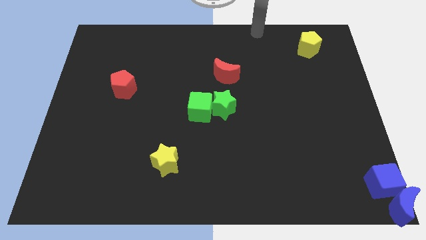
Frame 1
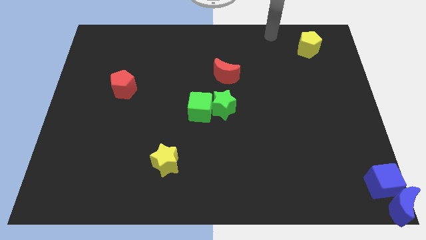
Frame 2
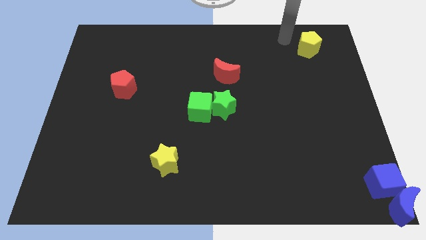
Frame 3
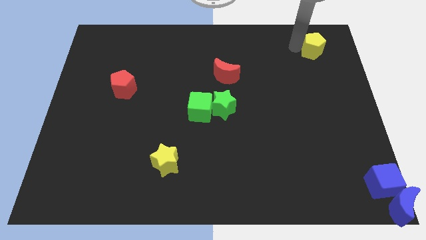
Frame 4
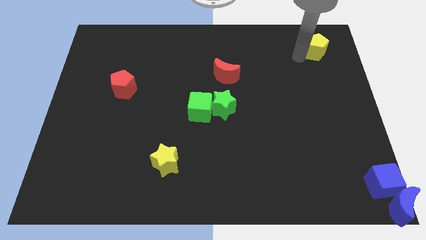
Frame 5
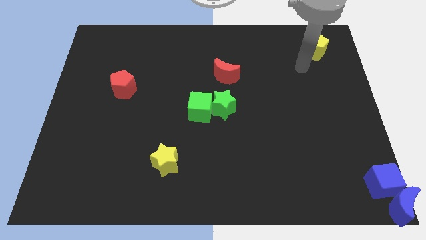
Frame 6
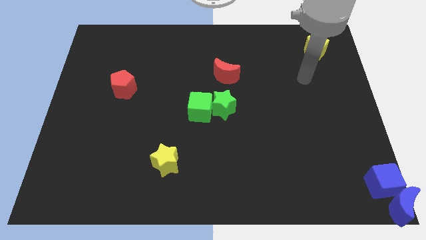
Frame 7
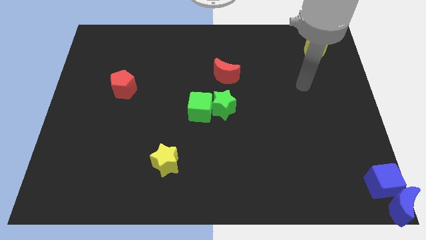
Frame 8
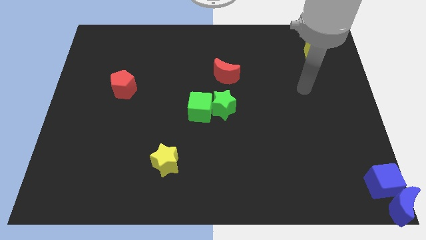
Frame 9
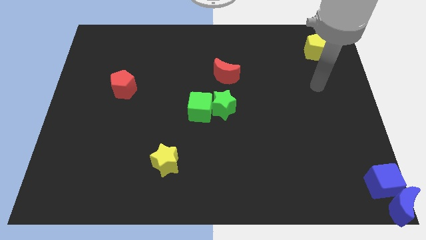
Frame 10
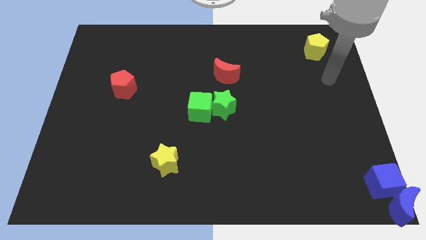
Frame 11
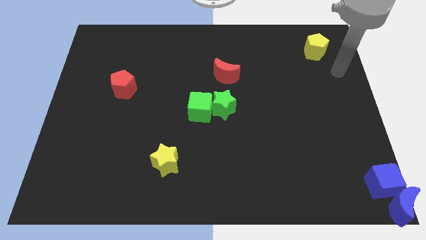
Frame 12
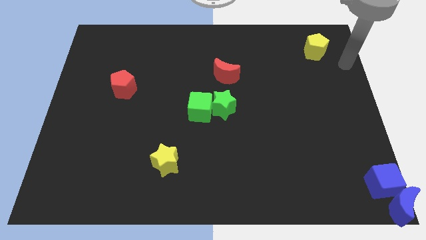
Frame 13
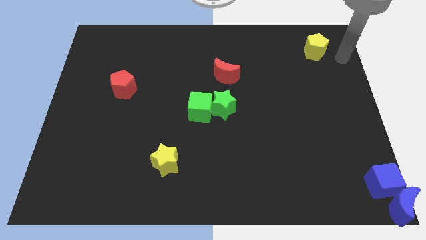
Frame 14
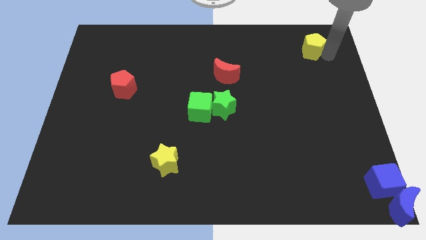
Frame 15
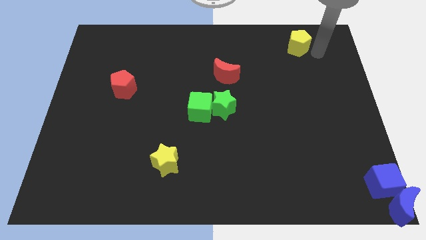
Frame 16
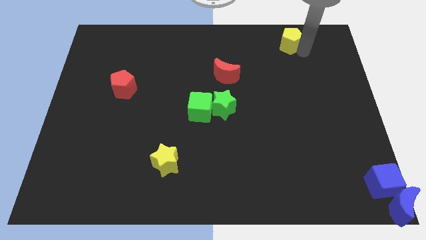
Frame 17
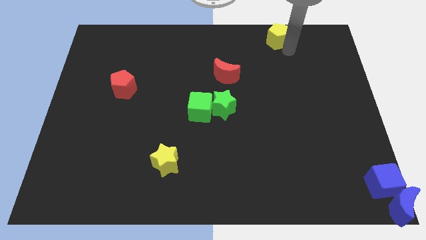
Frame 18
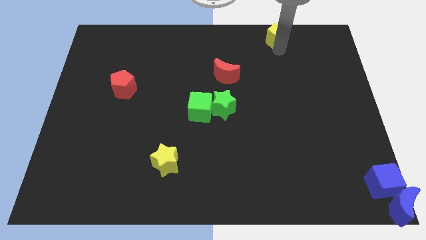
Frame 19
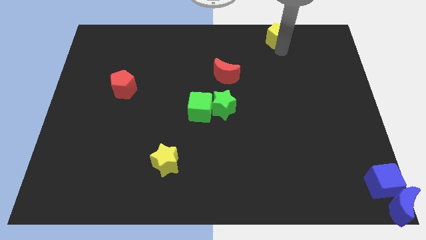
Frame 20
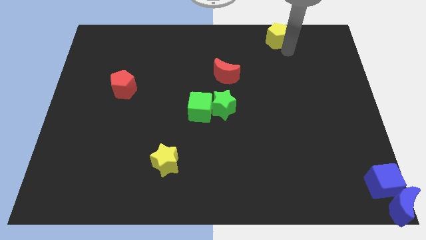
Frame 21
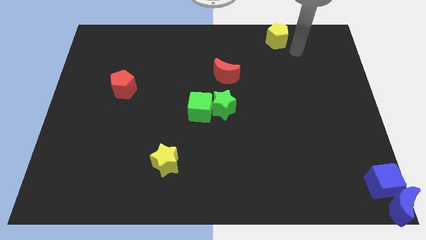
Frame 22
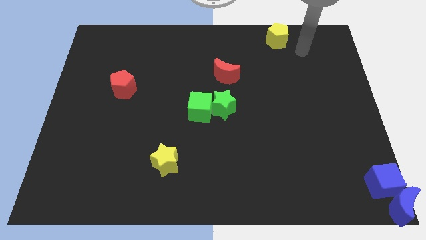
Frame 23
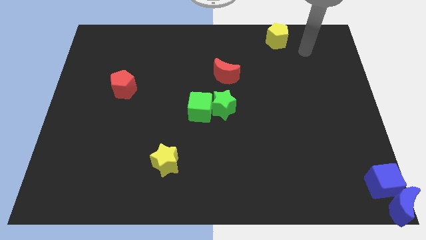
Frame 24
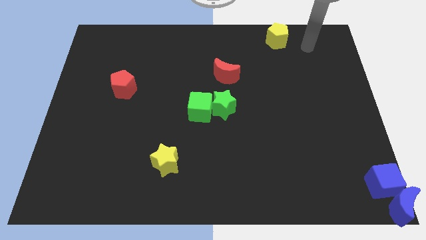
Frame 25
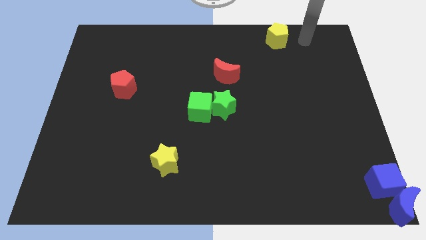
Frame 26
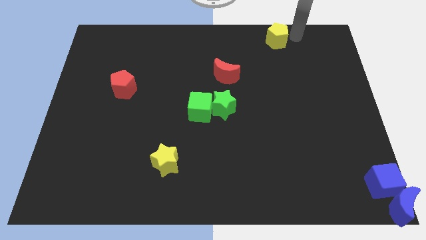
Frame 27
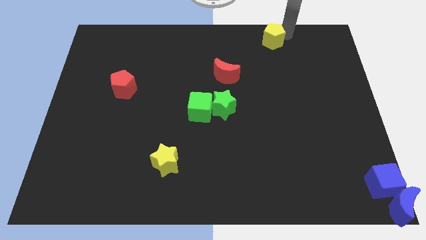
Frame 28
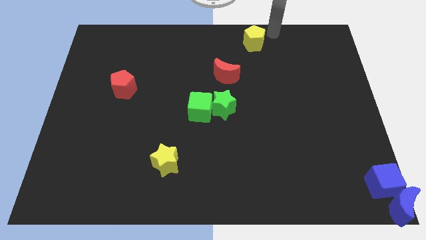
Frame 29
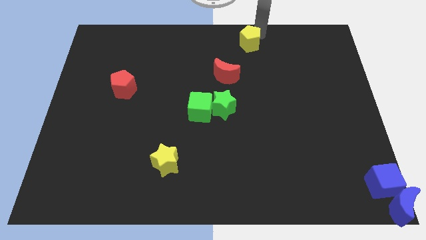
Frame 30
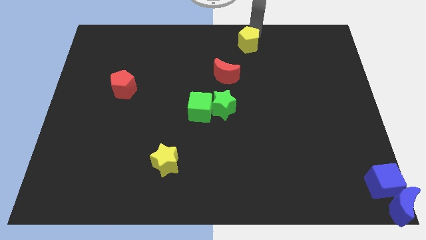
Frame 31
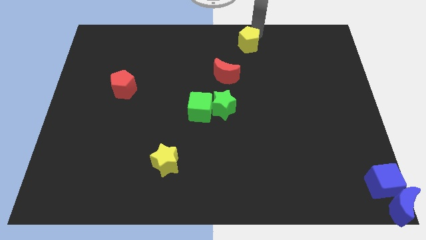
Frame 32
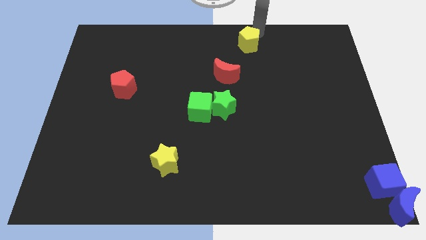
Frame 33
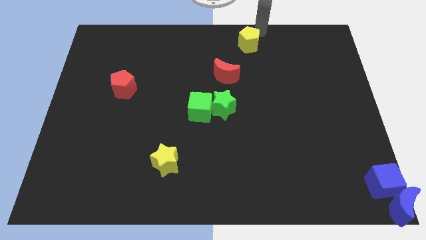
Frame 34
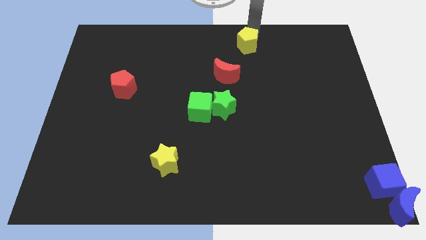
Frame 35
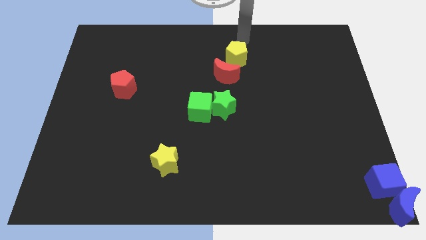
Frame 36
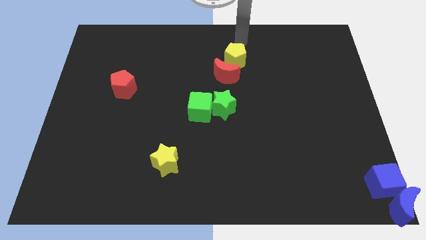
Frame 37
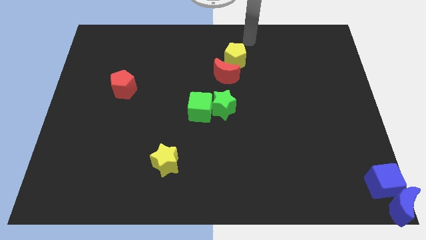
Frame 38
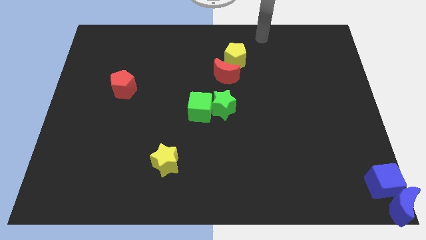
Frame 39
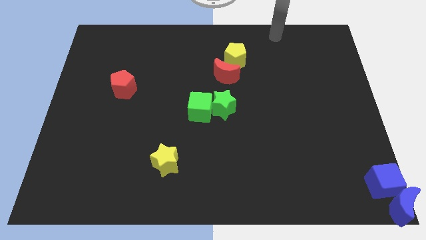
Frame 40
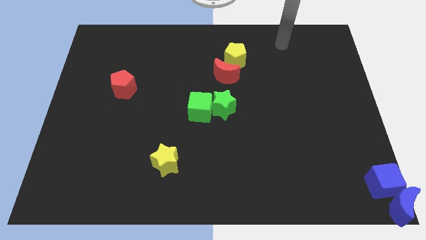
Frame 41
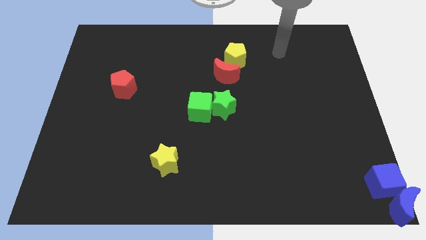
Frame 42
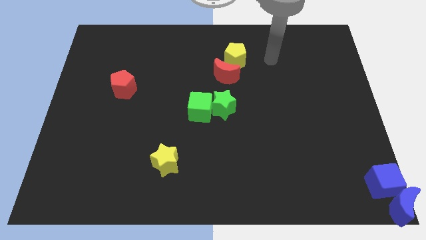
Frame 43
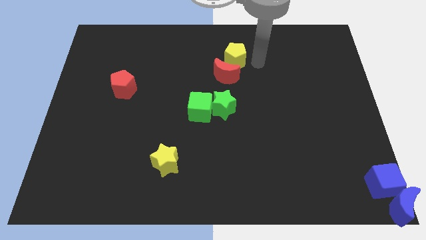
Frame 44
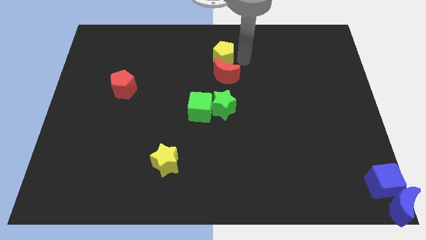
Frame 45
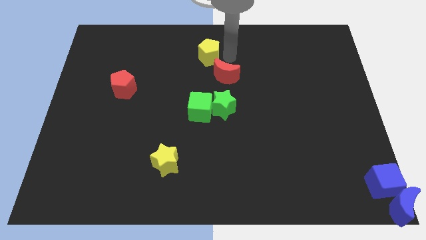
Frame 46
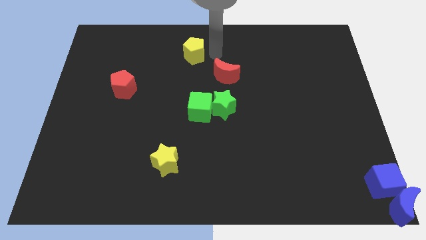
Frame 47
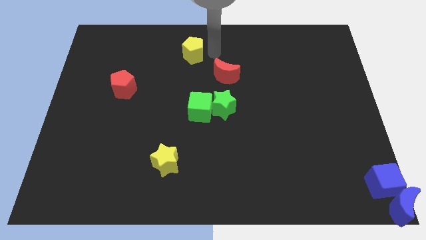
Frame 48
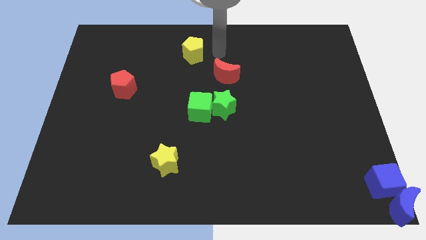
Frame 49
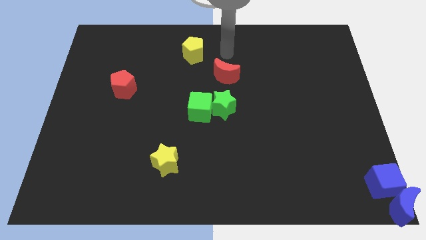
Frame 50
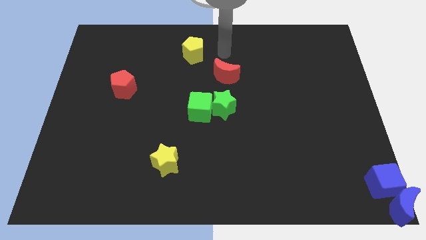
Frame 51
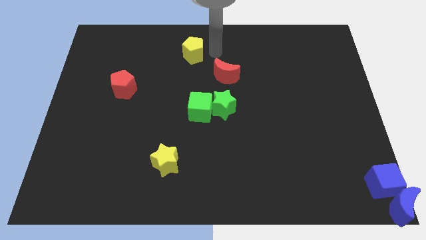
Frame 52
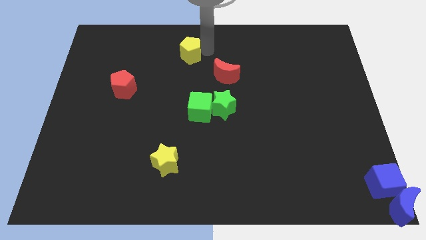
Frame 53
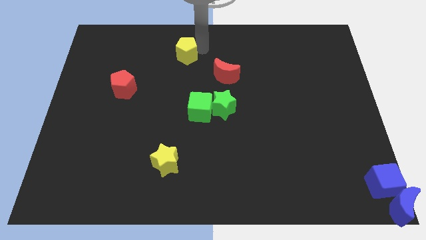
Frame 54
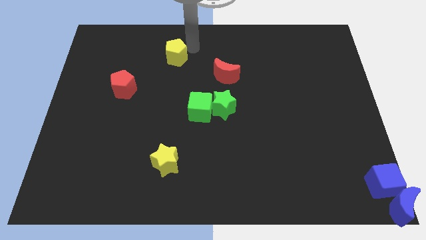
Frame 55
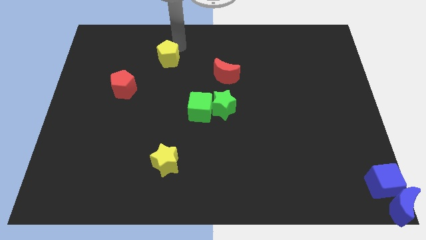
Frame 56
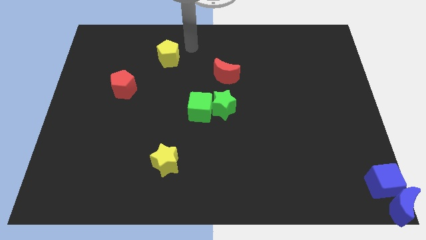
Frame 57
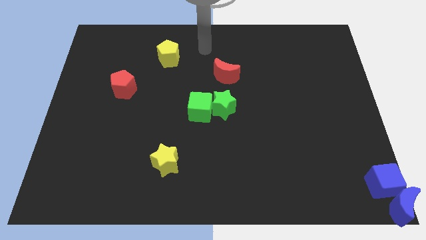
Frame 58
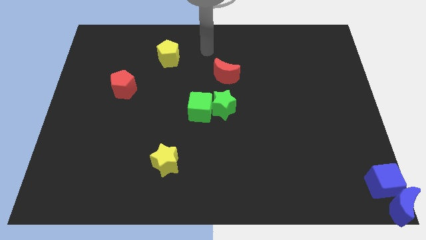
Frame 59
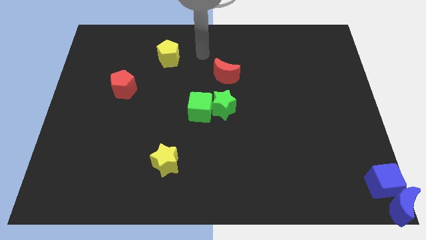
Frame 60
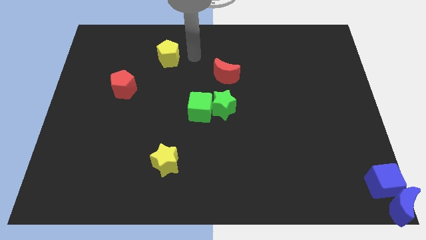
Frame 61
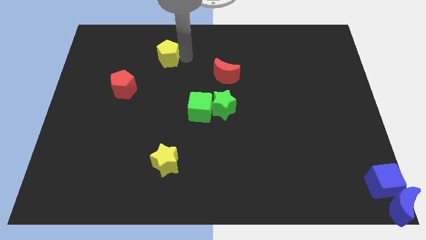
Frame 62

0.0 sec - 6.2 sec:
put the yellow pentagon diagonally on the top right of the red pentagon

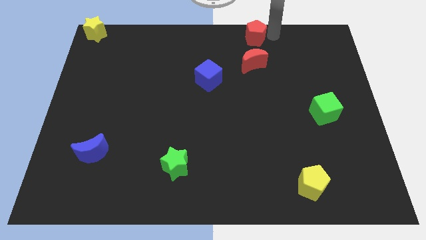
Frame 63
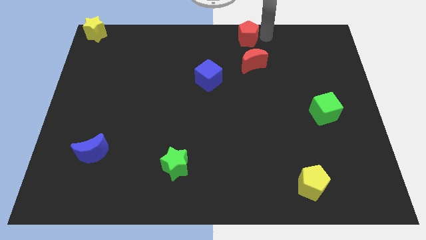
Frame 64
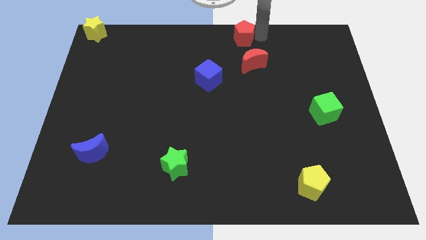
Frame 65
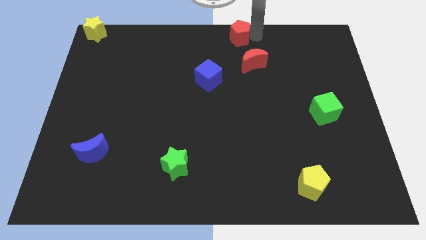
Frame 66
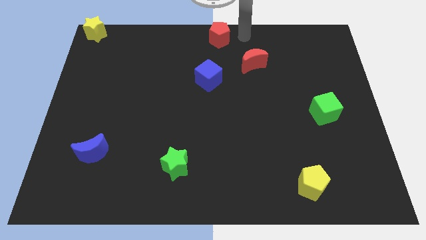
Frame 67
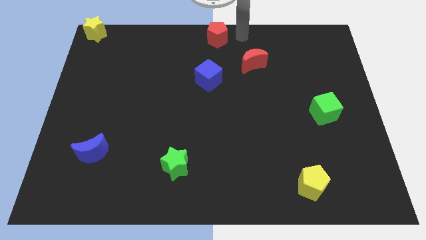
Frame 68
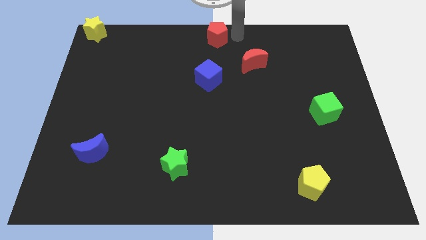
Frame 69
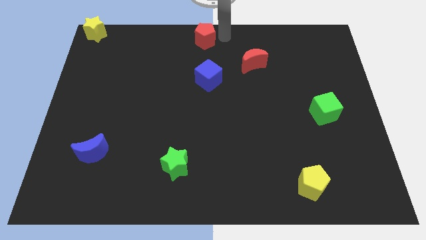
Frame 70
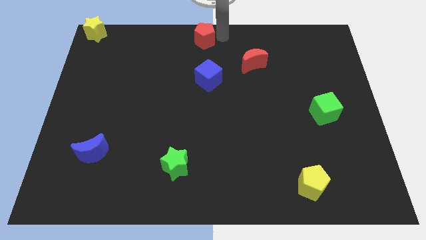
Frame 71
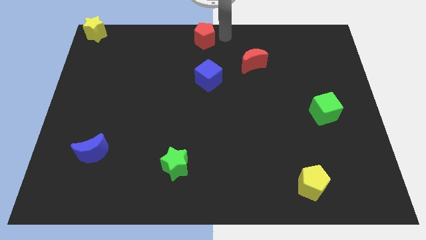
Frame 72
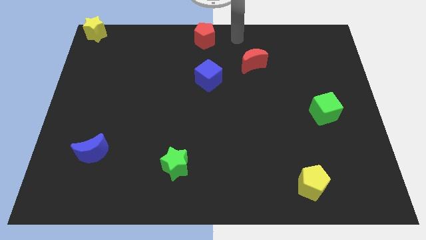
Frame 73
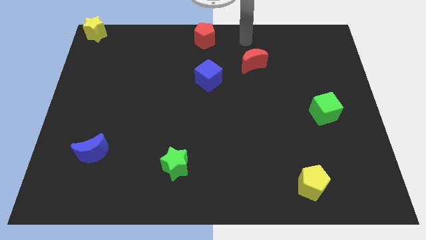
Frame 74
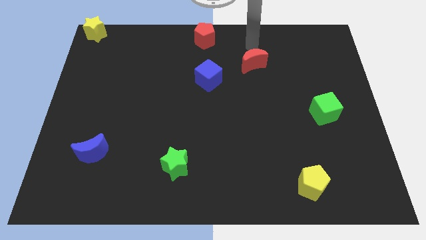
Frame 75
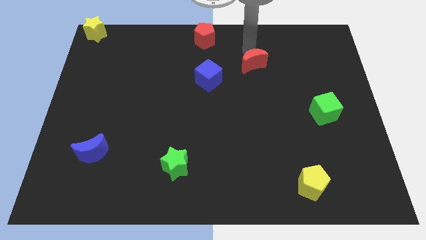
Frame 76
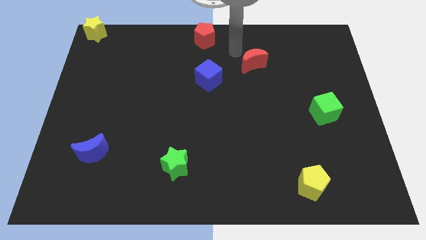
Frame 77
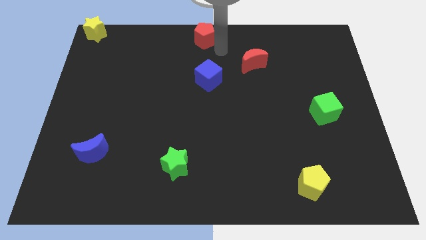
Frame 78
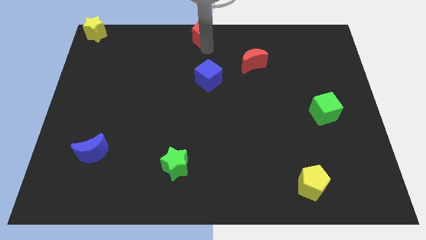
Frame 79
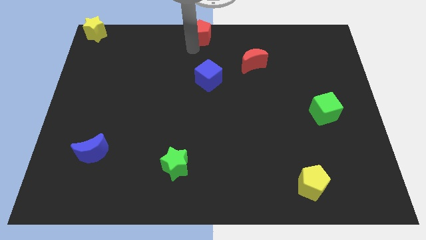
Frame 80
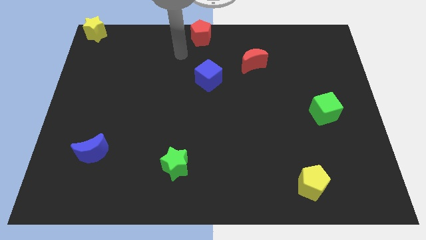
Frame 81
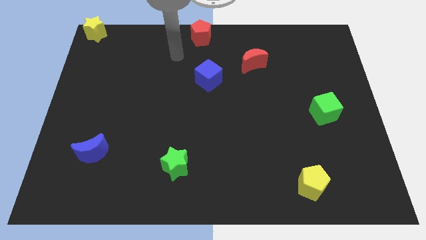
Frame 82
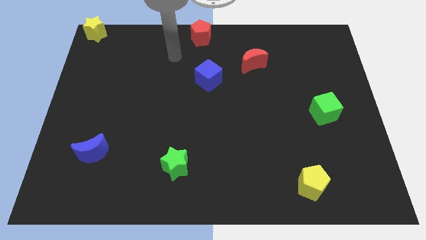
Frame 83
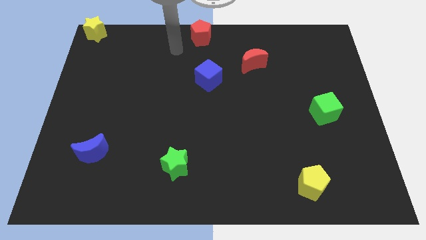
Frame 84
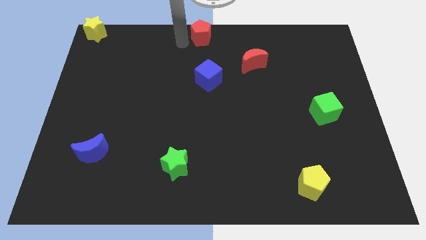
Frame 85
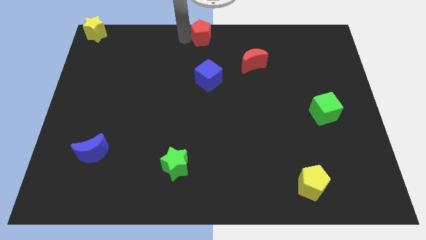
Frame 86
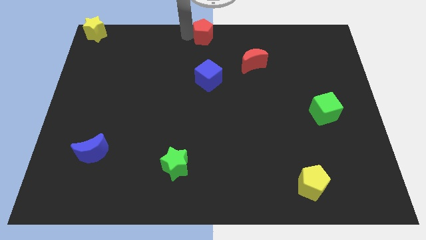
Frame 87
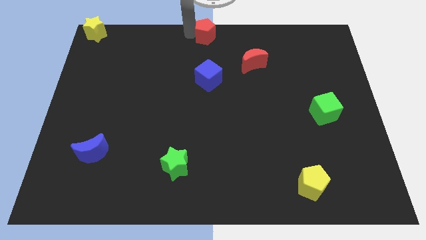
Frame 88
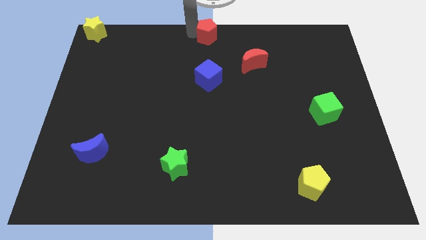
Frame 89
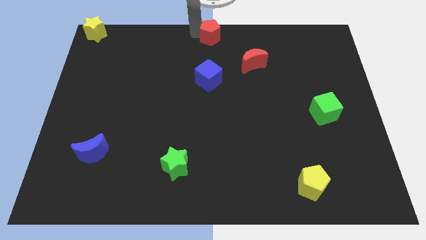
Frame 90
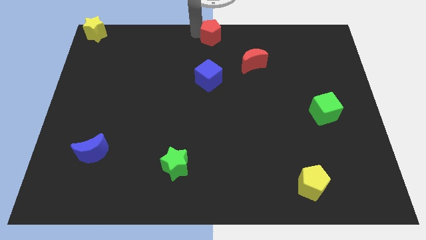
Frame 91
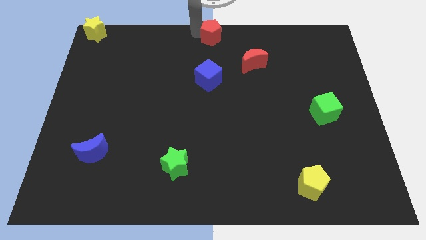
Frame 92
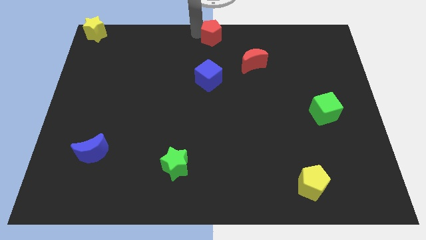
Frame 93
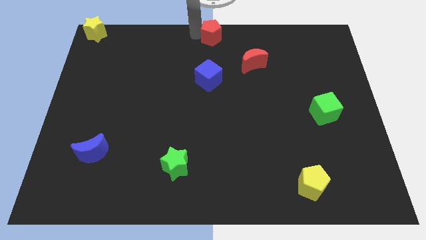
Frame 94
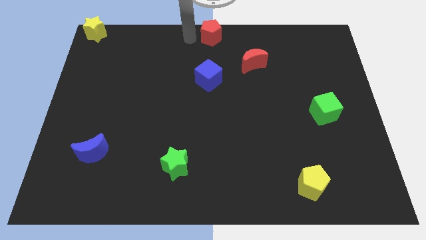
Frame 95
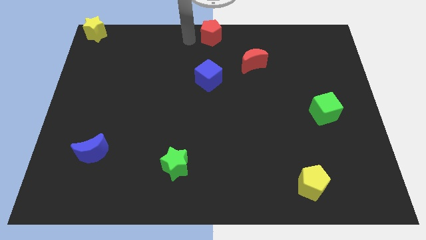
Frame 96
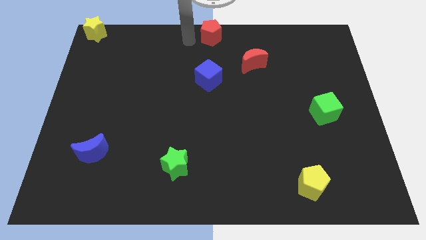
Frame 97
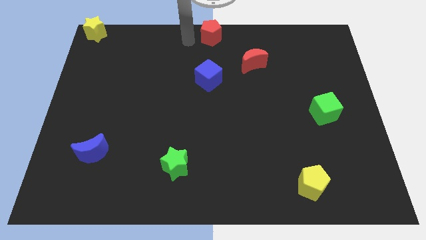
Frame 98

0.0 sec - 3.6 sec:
put the red pentagon at the top center of the board
